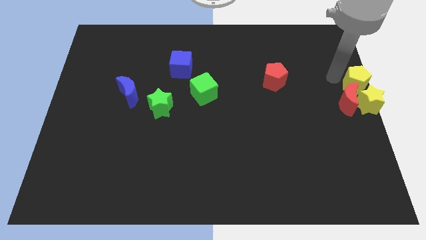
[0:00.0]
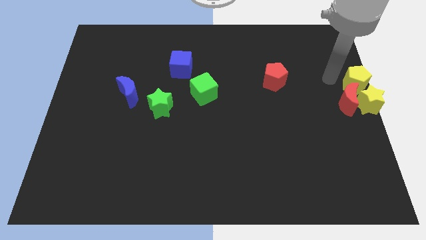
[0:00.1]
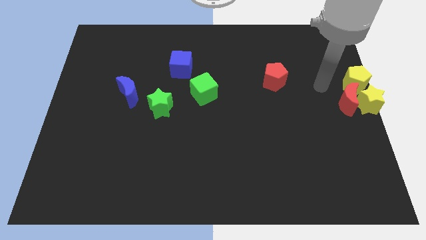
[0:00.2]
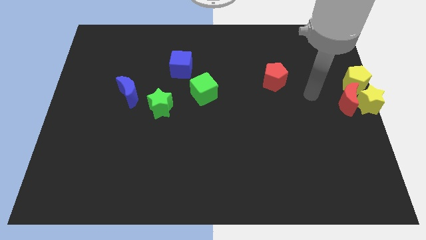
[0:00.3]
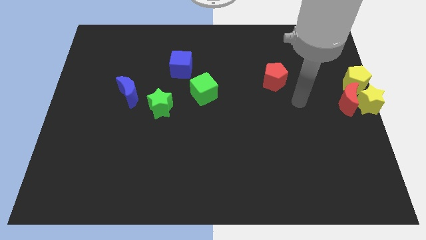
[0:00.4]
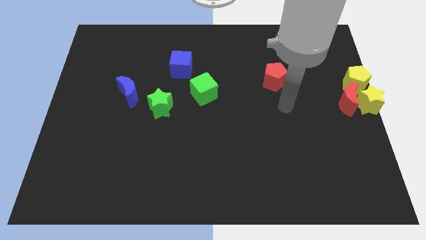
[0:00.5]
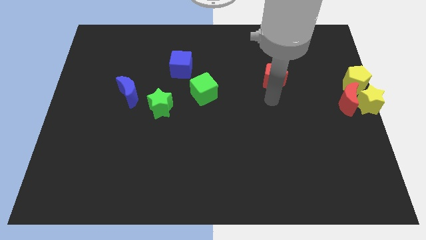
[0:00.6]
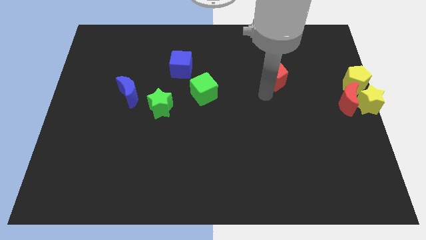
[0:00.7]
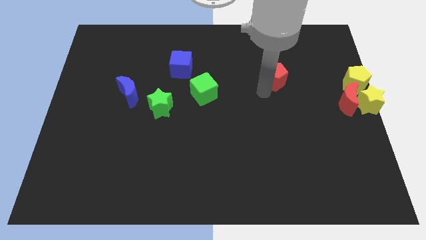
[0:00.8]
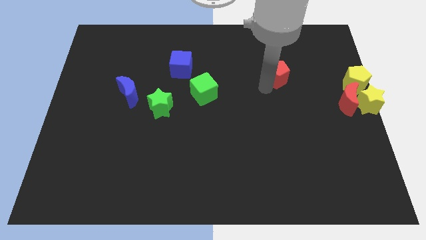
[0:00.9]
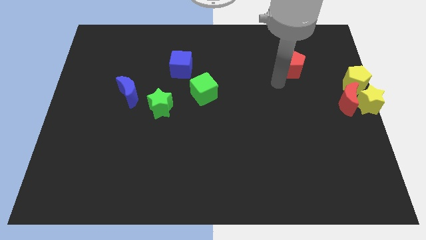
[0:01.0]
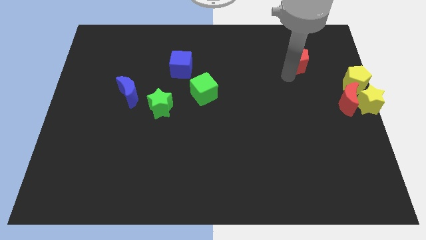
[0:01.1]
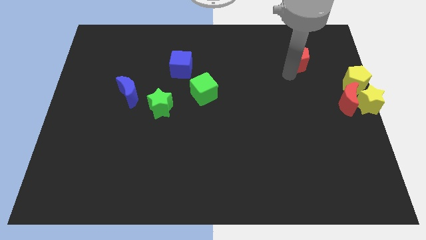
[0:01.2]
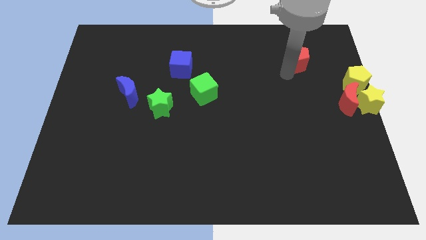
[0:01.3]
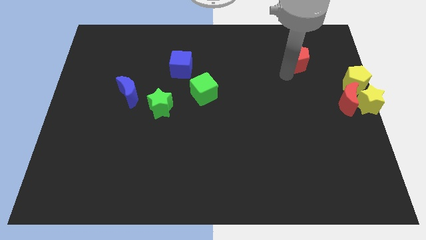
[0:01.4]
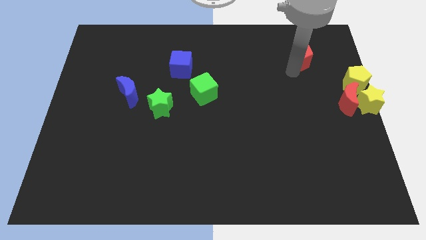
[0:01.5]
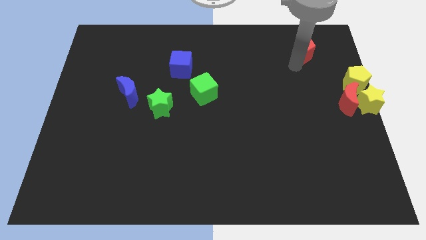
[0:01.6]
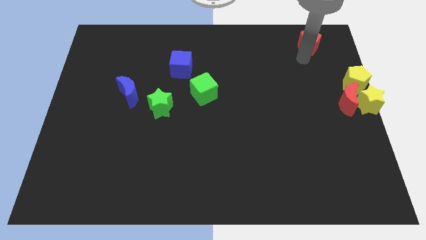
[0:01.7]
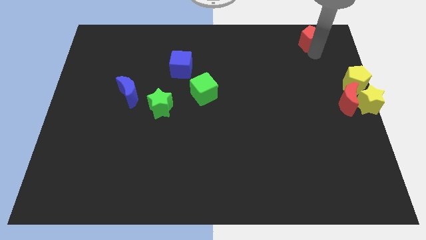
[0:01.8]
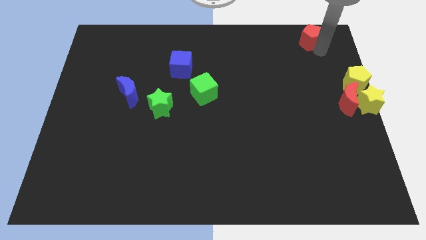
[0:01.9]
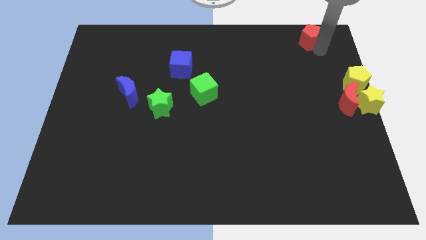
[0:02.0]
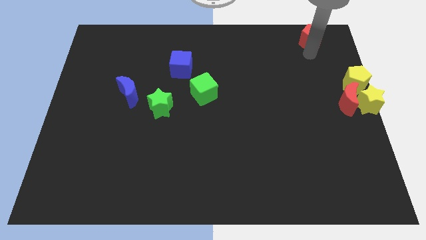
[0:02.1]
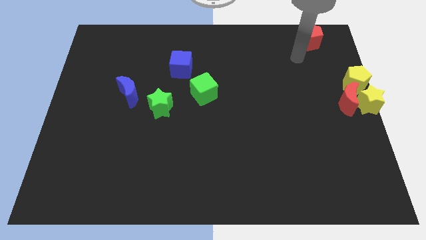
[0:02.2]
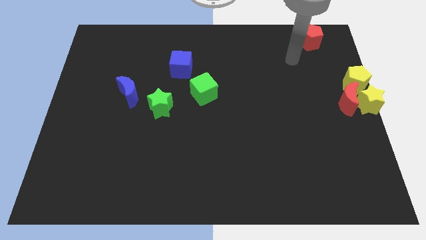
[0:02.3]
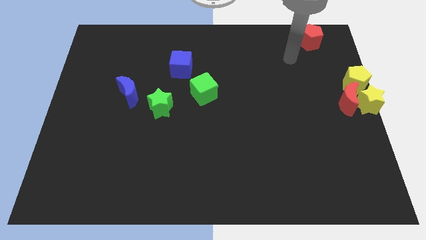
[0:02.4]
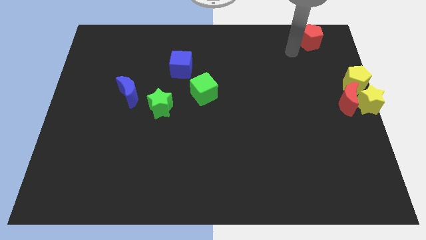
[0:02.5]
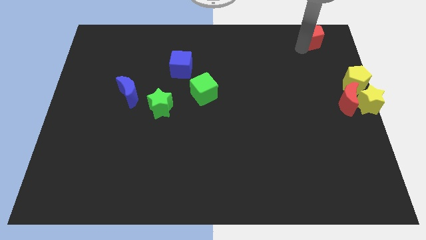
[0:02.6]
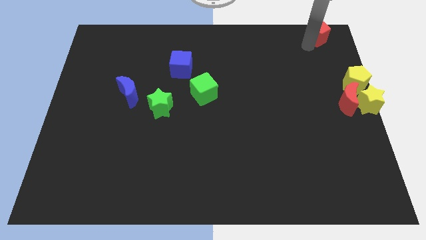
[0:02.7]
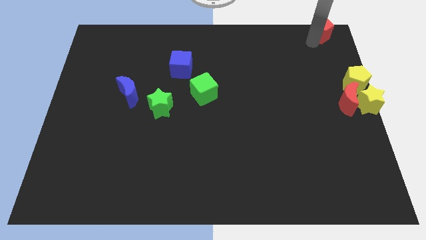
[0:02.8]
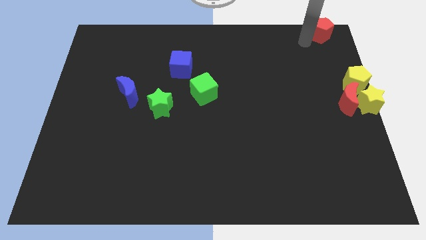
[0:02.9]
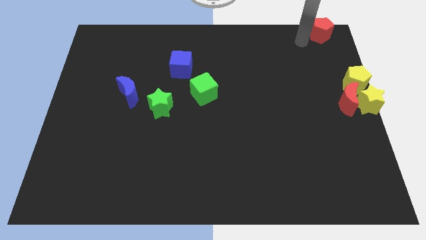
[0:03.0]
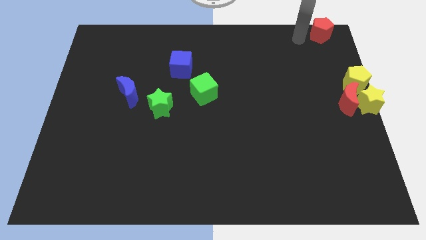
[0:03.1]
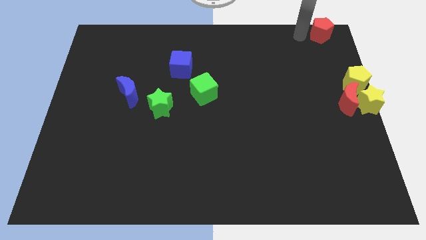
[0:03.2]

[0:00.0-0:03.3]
push the red pentagon towards the top right corner of the board

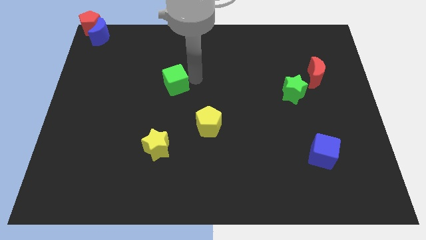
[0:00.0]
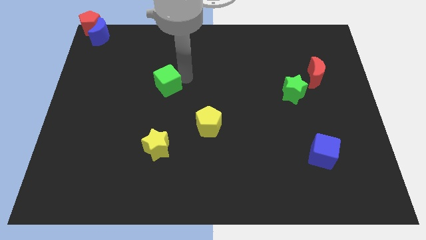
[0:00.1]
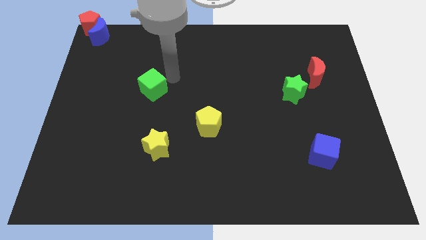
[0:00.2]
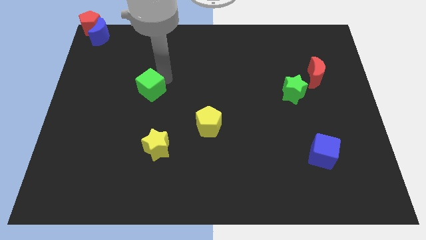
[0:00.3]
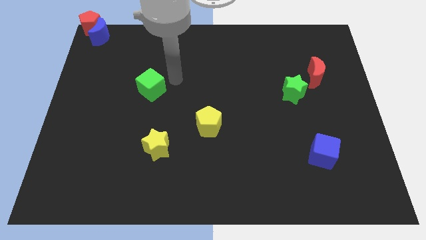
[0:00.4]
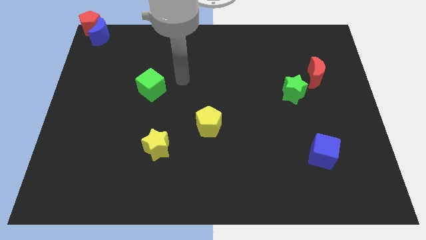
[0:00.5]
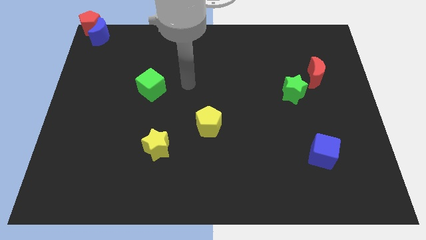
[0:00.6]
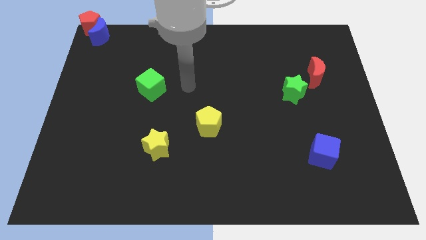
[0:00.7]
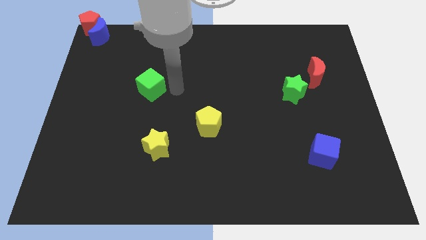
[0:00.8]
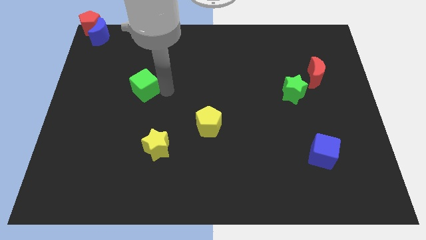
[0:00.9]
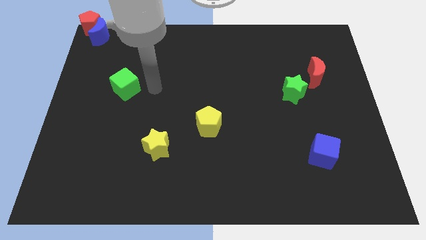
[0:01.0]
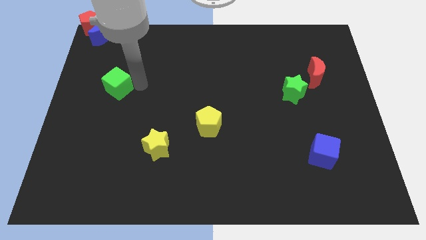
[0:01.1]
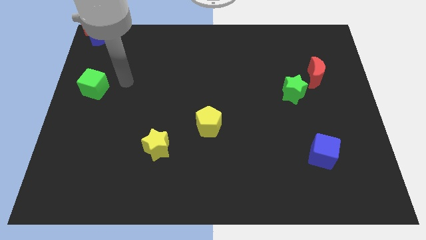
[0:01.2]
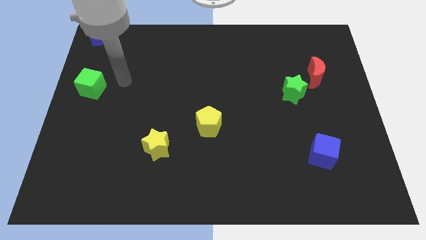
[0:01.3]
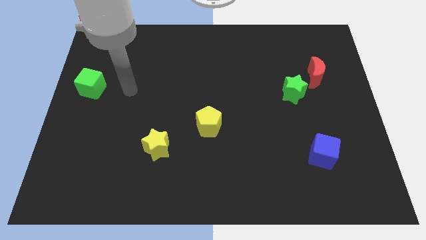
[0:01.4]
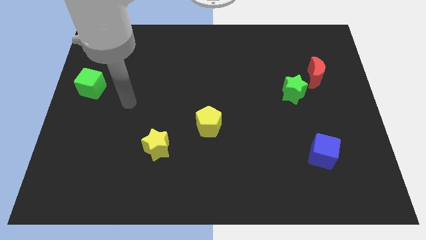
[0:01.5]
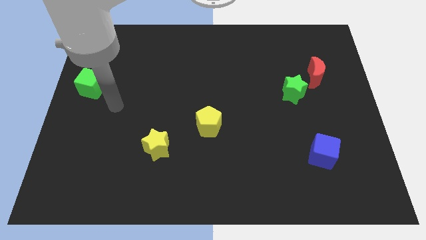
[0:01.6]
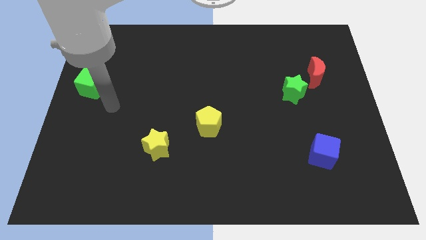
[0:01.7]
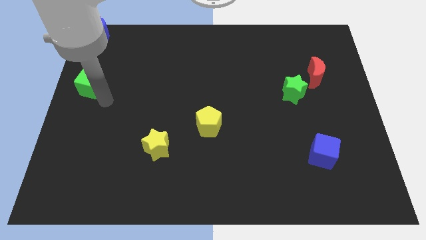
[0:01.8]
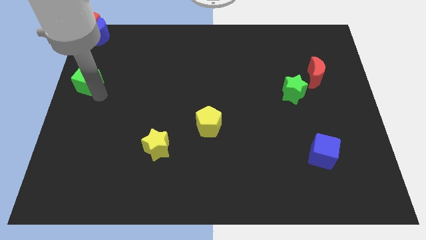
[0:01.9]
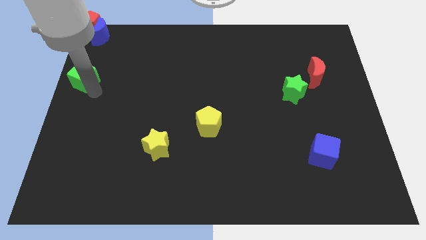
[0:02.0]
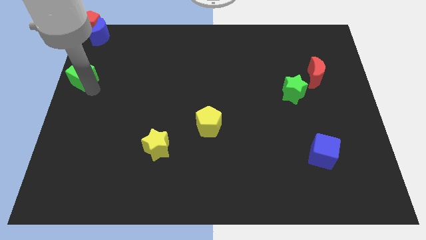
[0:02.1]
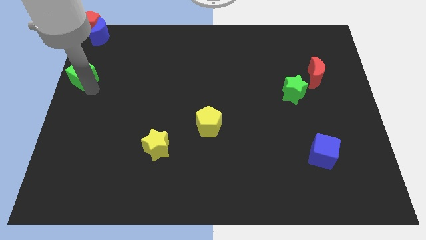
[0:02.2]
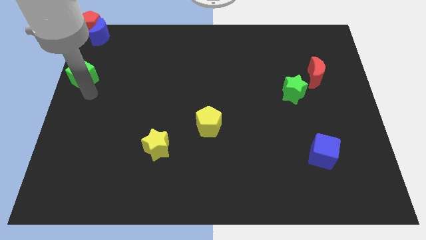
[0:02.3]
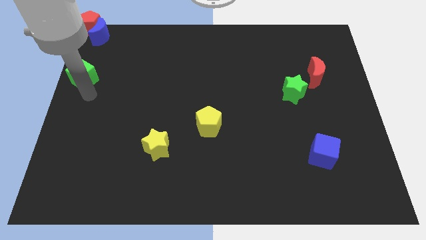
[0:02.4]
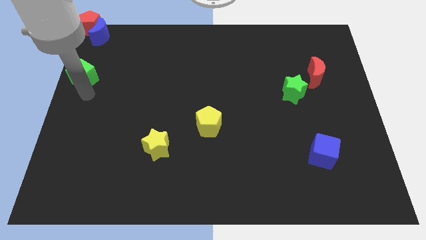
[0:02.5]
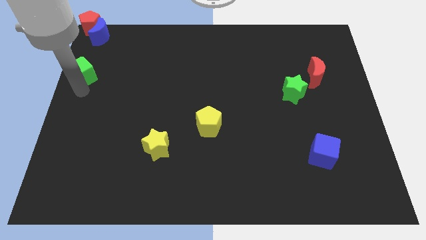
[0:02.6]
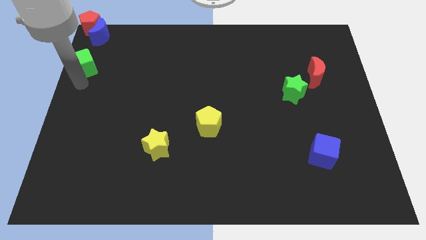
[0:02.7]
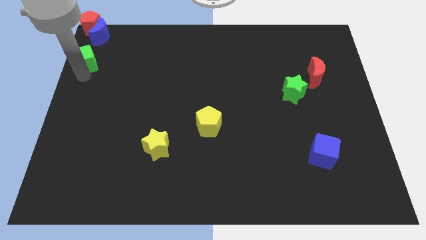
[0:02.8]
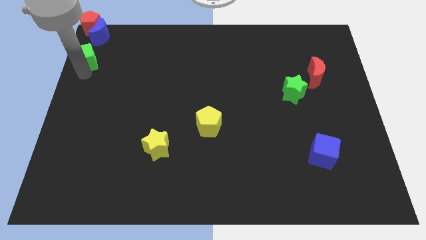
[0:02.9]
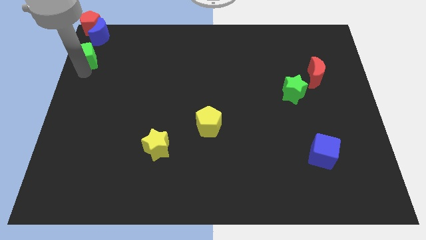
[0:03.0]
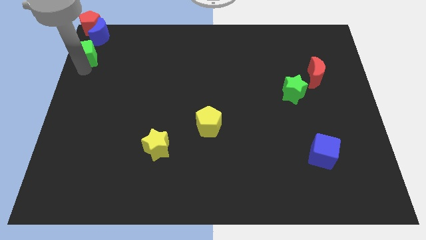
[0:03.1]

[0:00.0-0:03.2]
place the green cube below the blue crescent

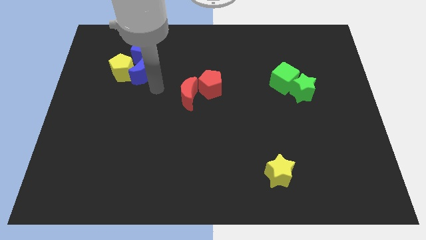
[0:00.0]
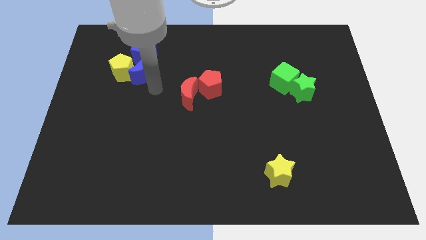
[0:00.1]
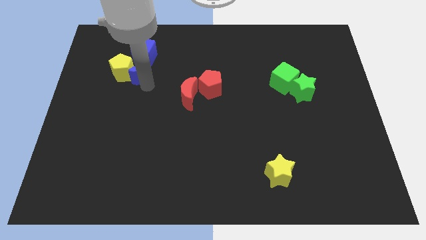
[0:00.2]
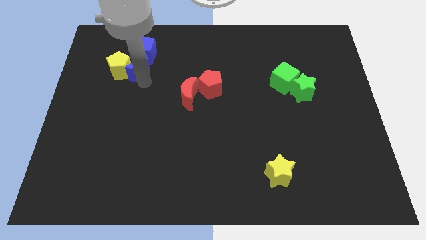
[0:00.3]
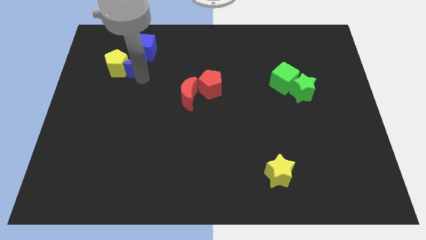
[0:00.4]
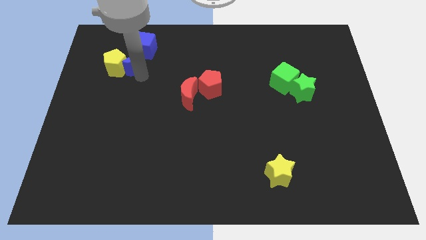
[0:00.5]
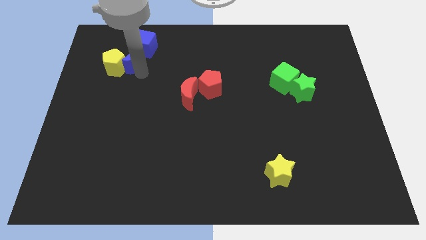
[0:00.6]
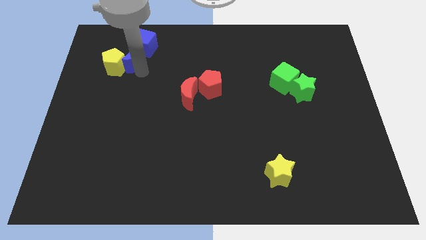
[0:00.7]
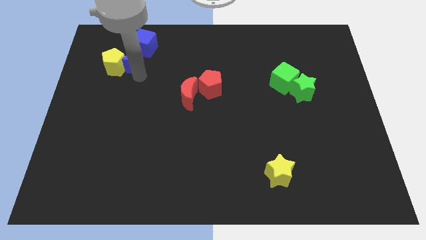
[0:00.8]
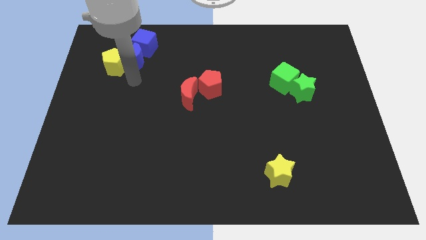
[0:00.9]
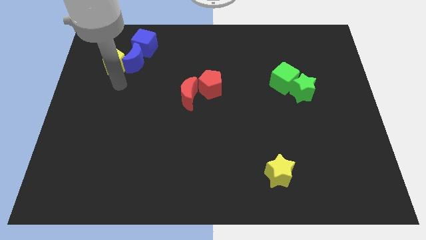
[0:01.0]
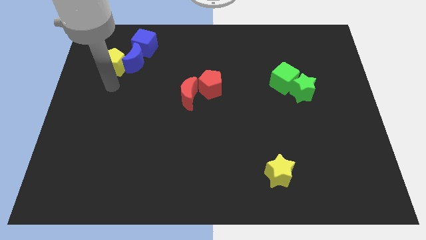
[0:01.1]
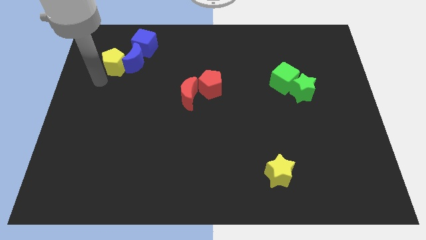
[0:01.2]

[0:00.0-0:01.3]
move a group of blocks to the top left corner of the board

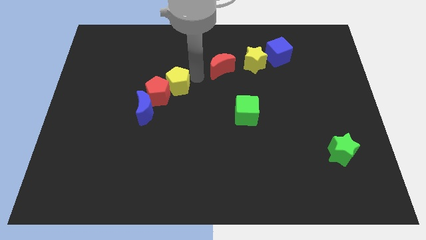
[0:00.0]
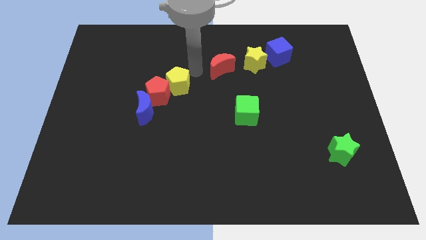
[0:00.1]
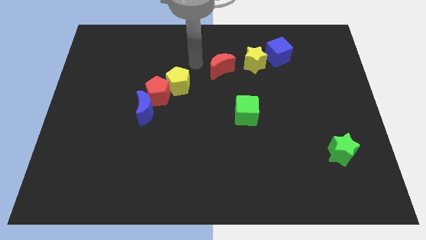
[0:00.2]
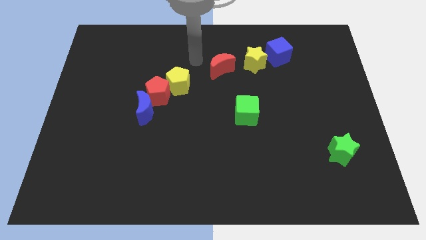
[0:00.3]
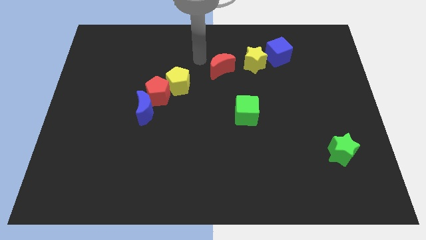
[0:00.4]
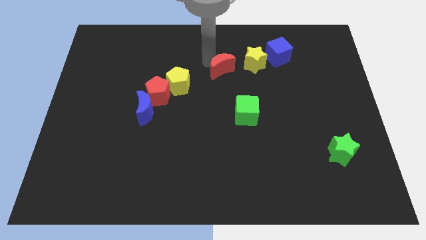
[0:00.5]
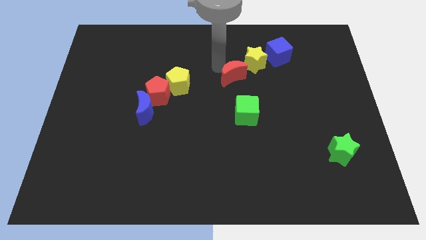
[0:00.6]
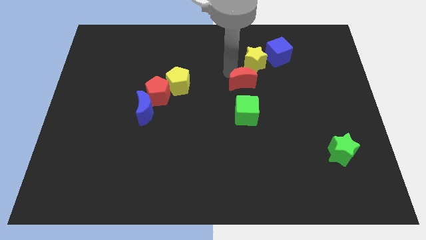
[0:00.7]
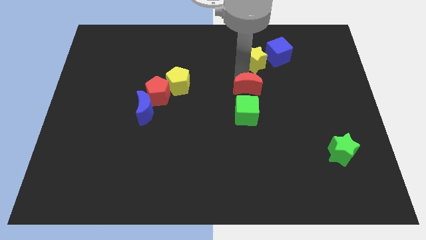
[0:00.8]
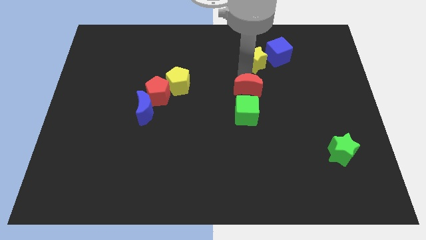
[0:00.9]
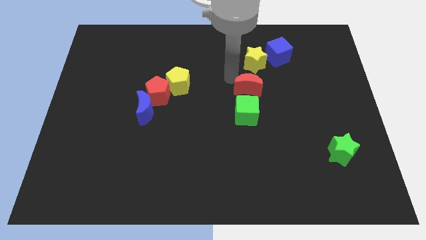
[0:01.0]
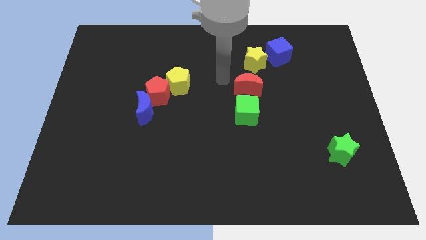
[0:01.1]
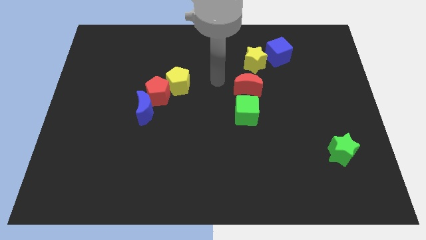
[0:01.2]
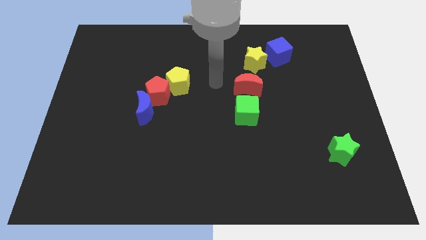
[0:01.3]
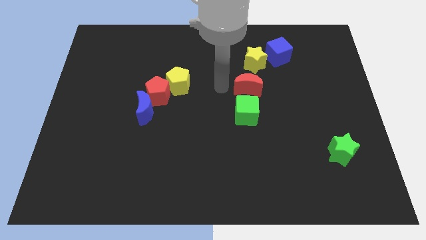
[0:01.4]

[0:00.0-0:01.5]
push the red crescent to the top of the green cube
